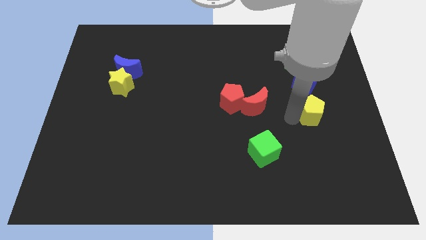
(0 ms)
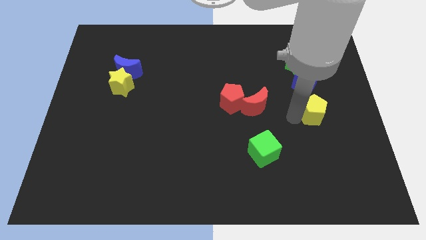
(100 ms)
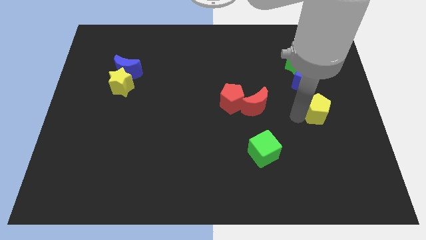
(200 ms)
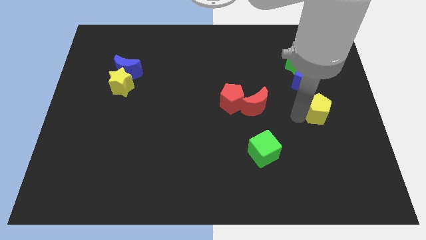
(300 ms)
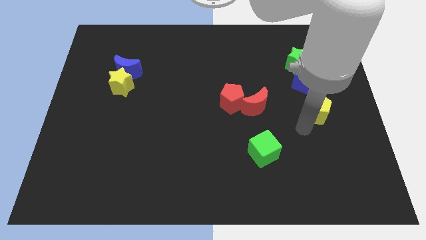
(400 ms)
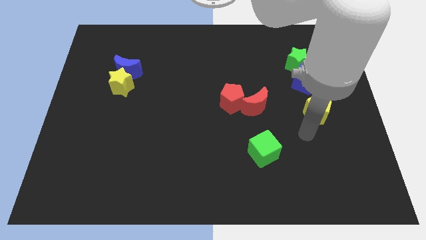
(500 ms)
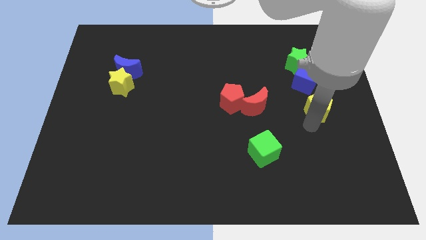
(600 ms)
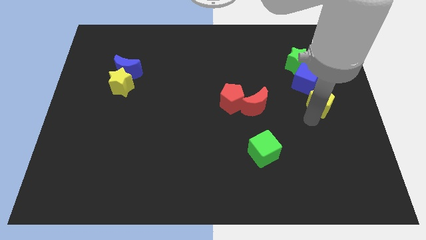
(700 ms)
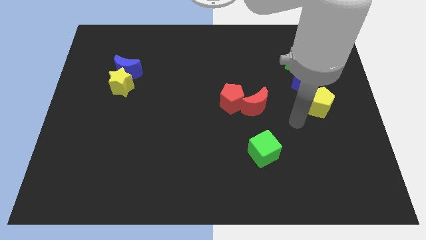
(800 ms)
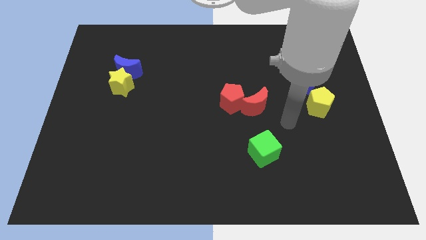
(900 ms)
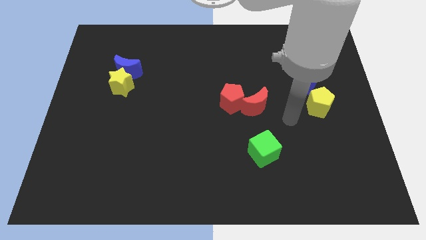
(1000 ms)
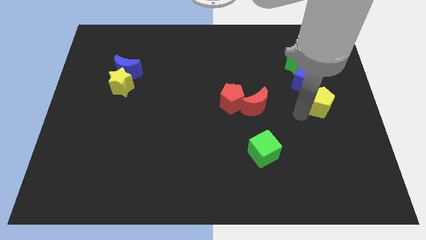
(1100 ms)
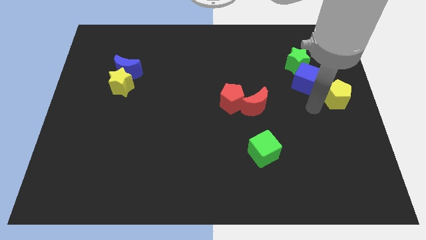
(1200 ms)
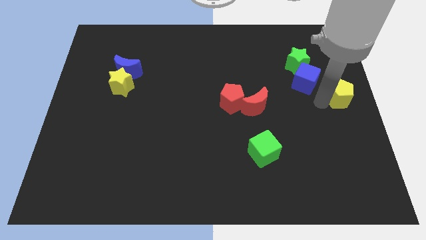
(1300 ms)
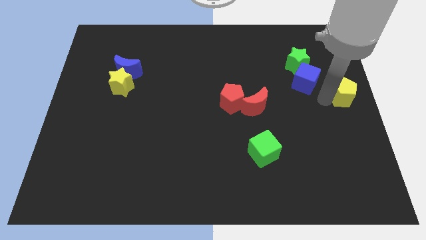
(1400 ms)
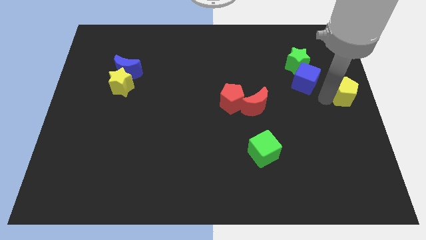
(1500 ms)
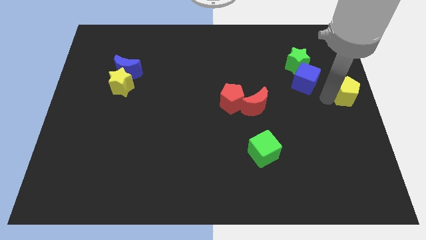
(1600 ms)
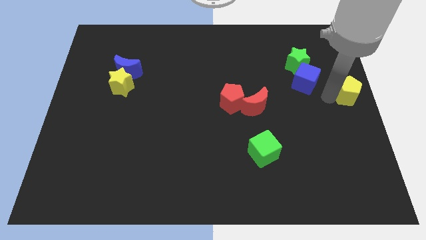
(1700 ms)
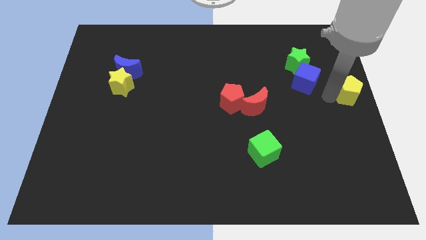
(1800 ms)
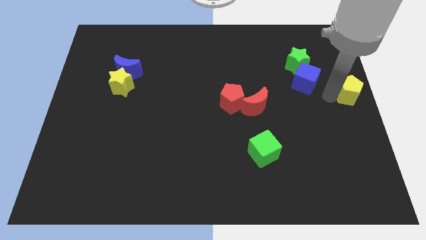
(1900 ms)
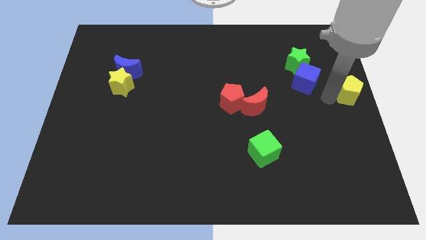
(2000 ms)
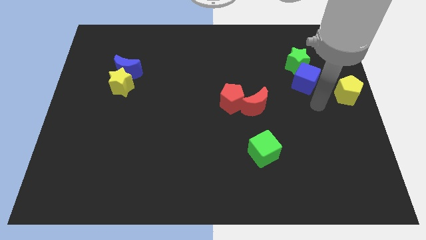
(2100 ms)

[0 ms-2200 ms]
place the yellow pentagon on the right side of the board

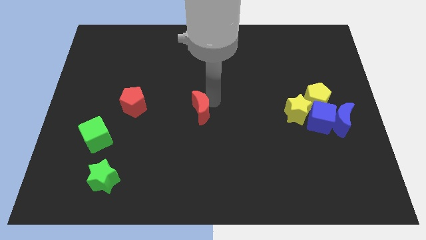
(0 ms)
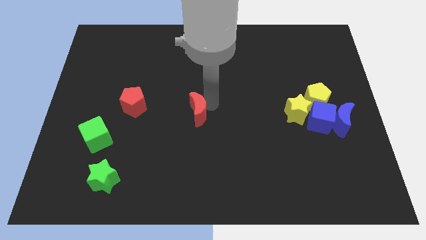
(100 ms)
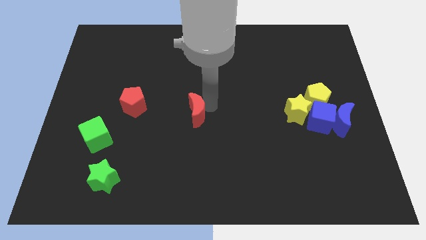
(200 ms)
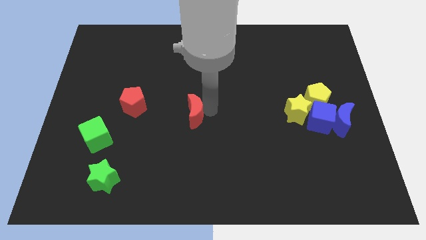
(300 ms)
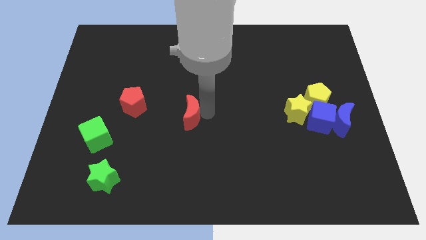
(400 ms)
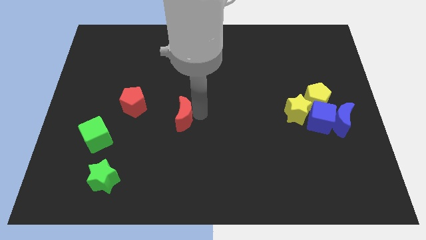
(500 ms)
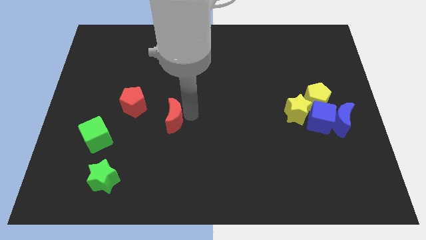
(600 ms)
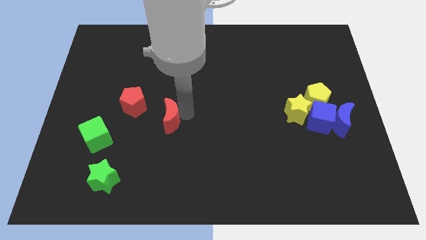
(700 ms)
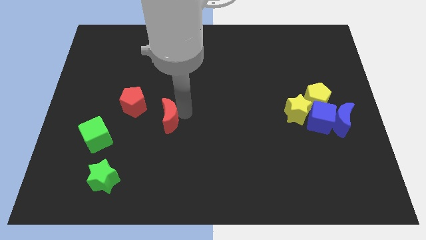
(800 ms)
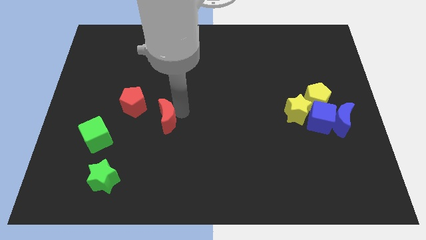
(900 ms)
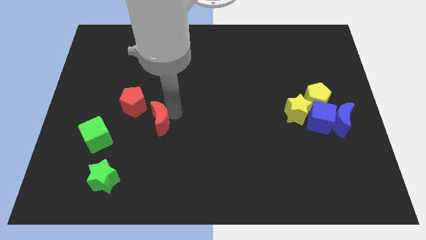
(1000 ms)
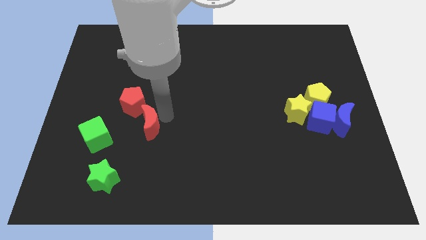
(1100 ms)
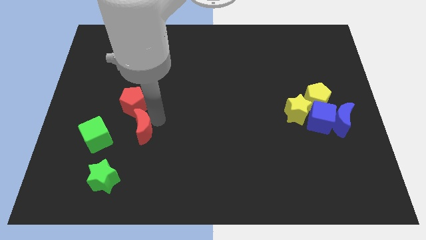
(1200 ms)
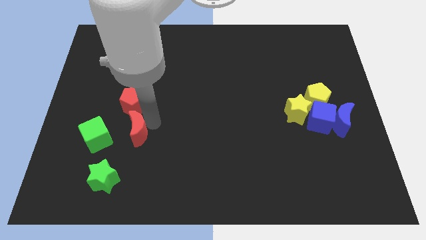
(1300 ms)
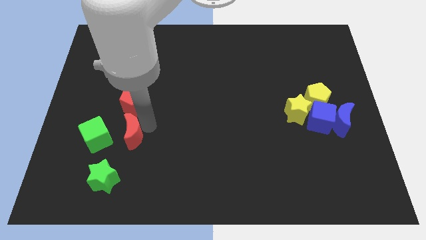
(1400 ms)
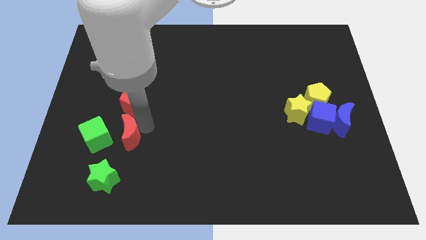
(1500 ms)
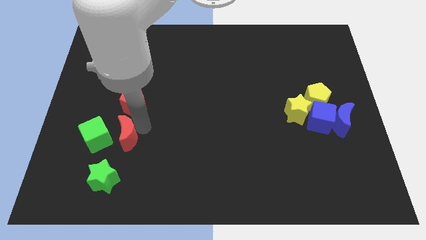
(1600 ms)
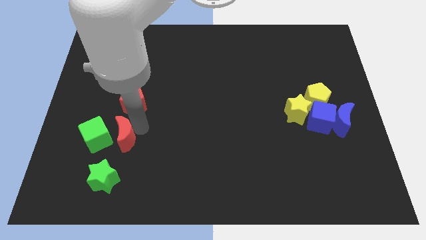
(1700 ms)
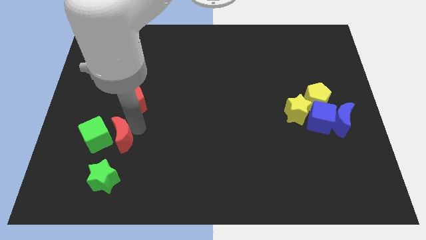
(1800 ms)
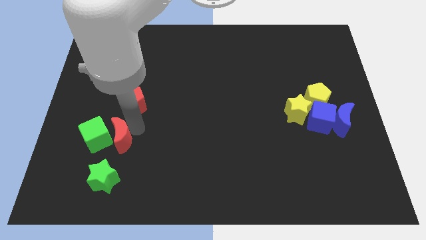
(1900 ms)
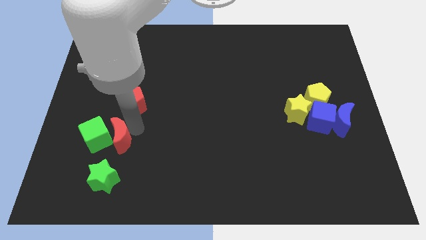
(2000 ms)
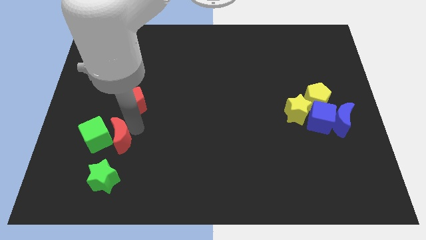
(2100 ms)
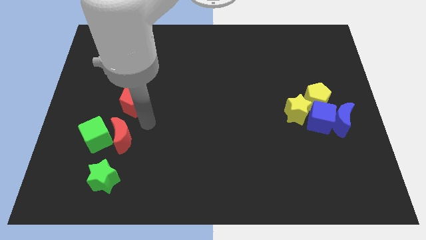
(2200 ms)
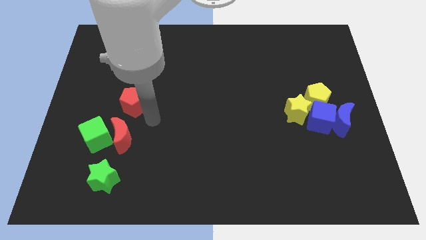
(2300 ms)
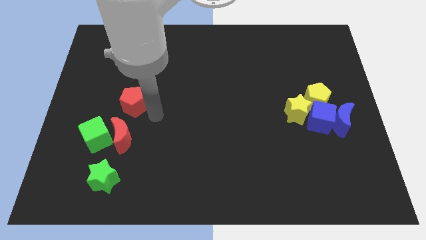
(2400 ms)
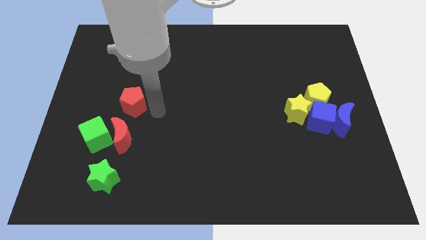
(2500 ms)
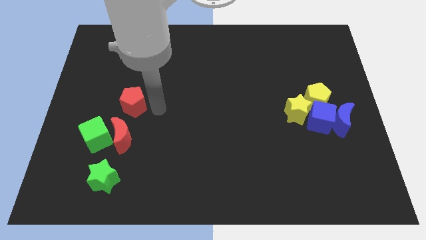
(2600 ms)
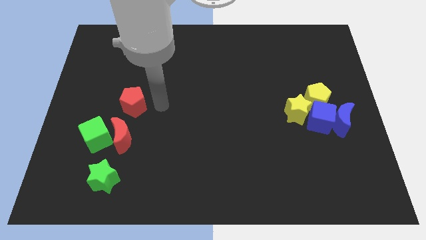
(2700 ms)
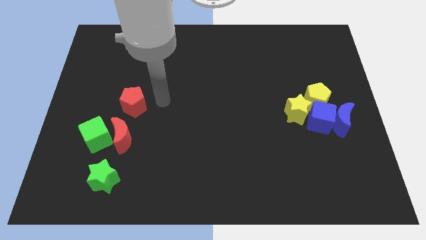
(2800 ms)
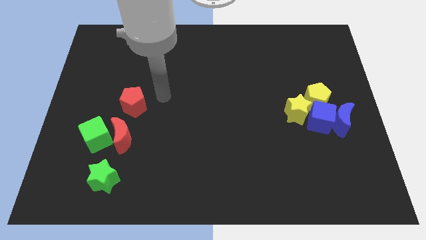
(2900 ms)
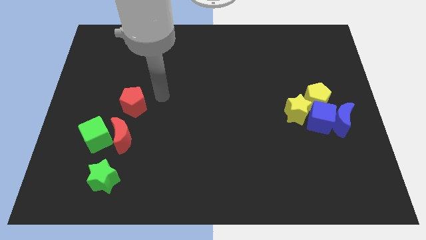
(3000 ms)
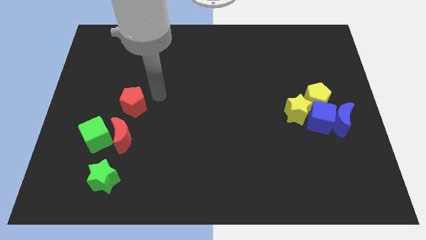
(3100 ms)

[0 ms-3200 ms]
move the red moon to the bottom of the red pentagon

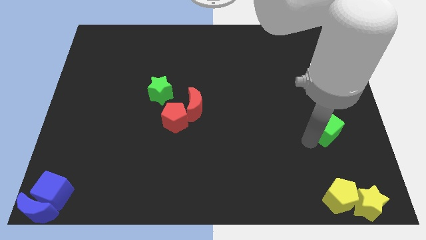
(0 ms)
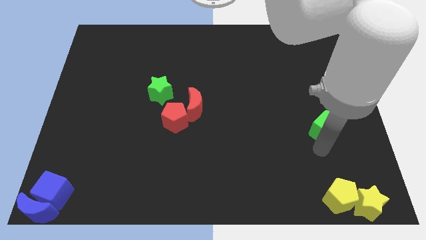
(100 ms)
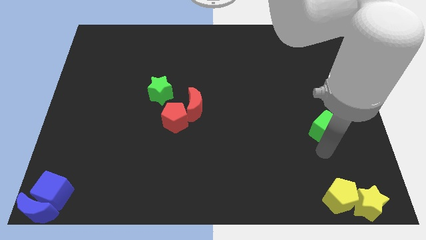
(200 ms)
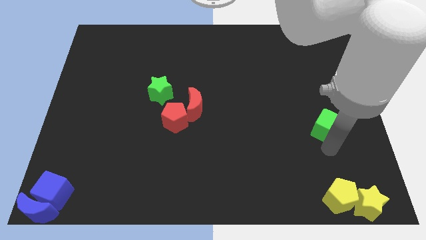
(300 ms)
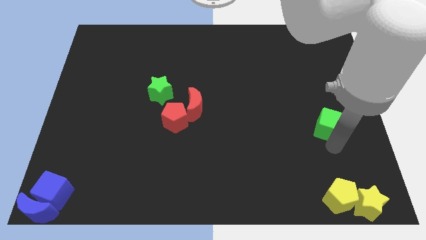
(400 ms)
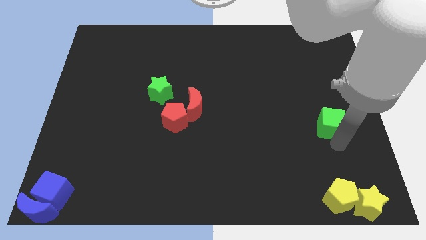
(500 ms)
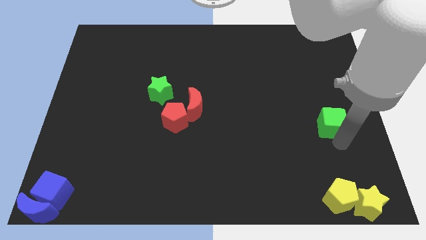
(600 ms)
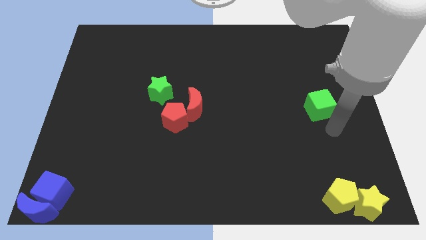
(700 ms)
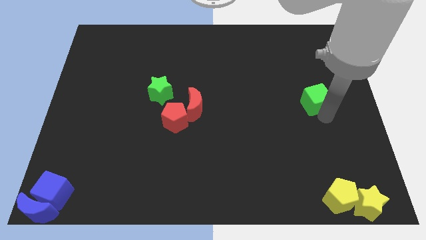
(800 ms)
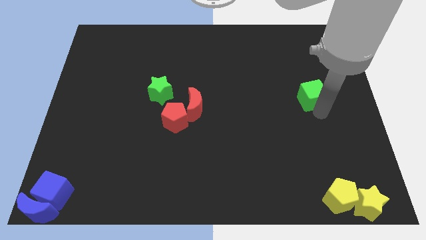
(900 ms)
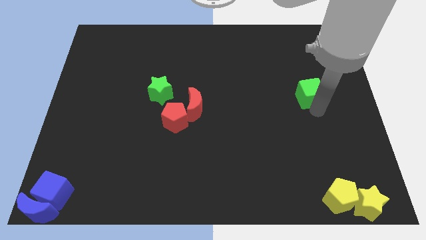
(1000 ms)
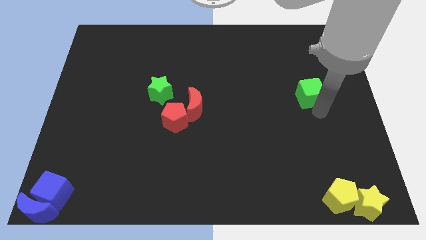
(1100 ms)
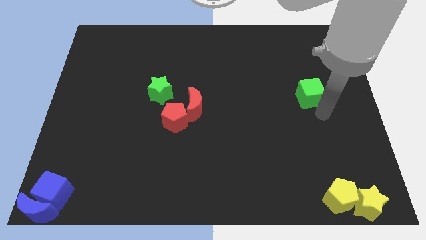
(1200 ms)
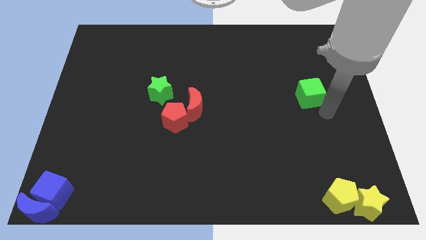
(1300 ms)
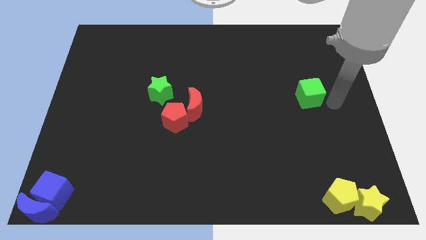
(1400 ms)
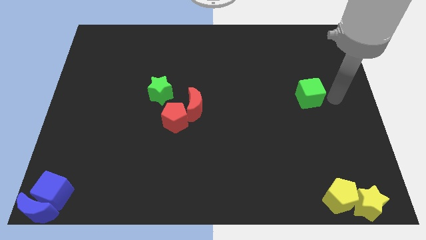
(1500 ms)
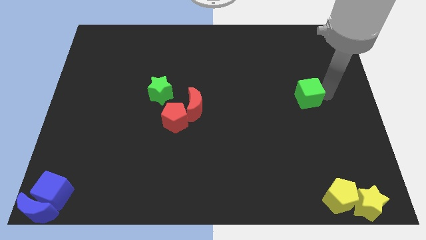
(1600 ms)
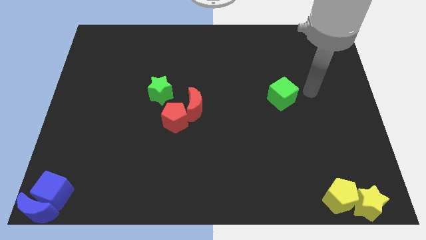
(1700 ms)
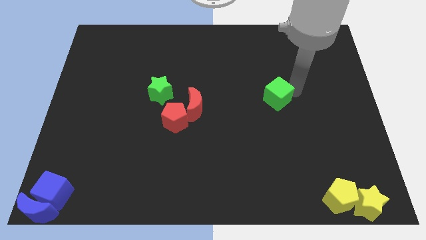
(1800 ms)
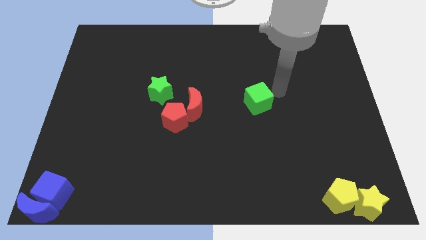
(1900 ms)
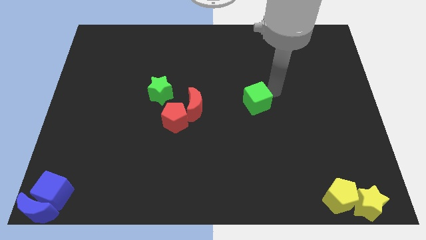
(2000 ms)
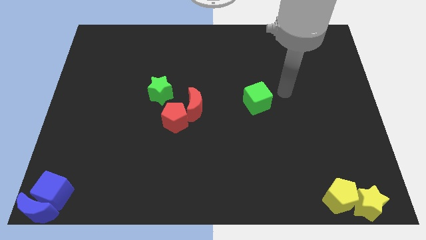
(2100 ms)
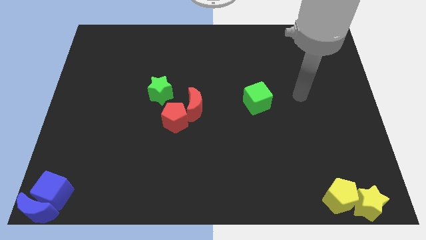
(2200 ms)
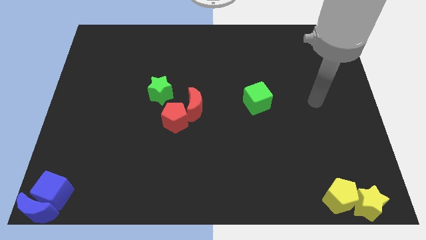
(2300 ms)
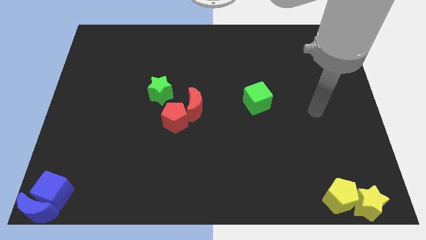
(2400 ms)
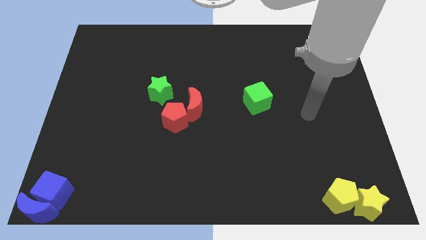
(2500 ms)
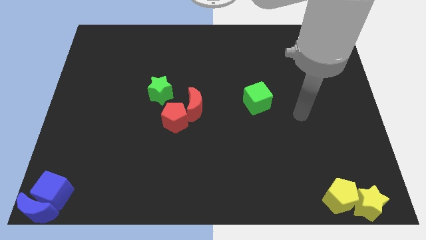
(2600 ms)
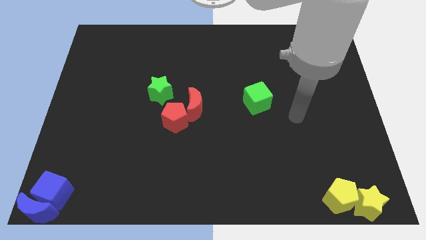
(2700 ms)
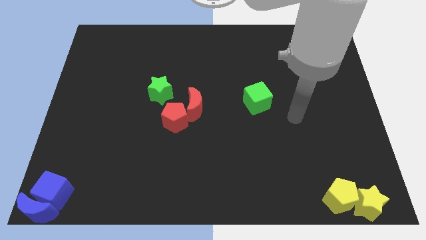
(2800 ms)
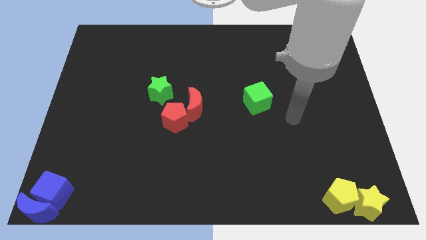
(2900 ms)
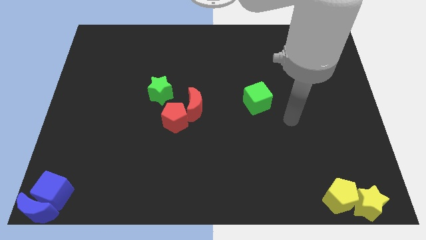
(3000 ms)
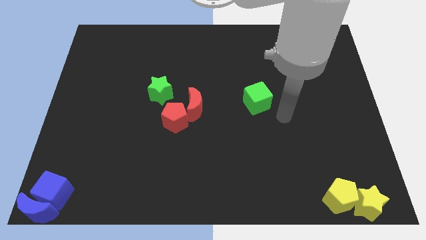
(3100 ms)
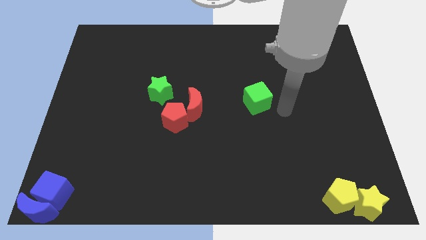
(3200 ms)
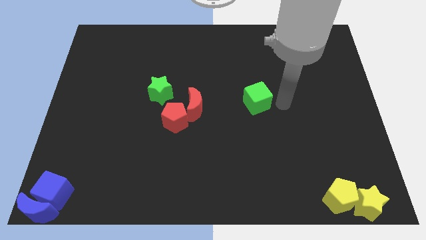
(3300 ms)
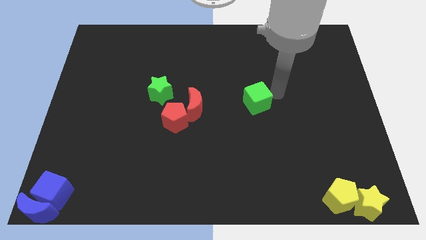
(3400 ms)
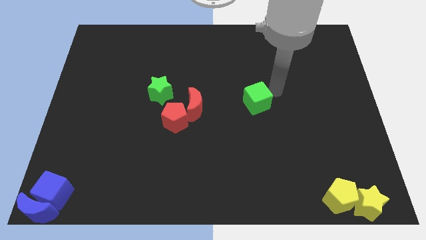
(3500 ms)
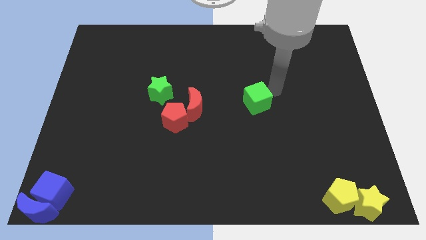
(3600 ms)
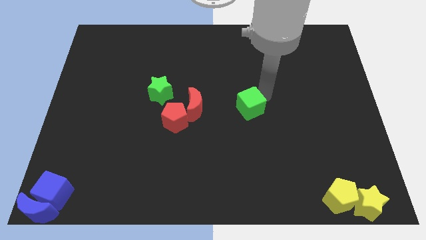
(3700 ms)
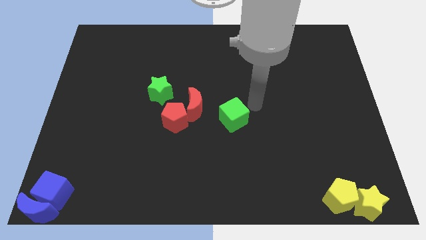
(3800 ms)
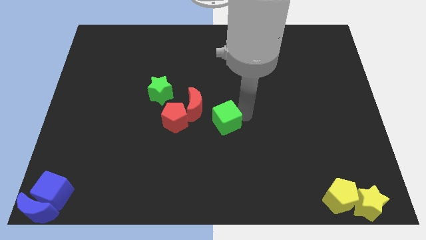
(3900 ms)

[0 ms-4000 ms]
place the green cube right to the red moon
